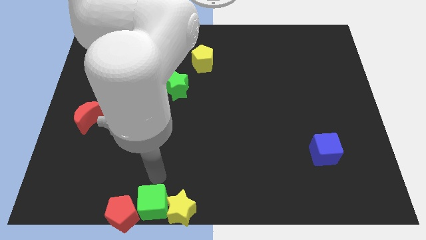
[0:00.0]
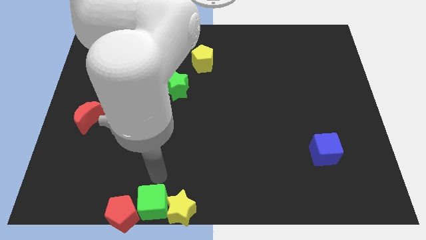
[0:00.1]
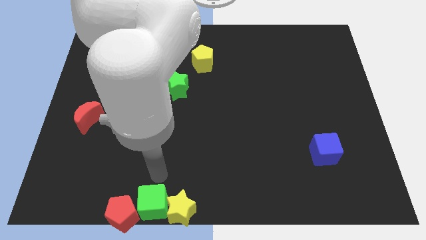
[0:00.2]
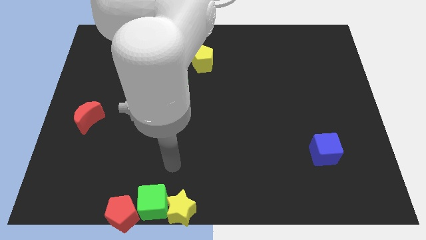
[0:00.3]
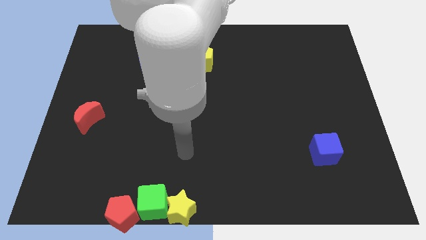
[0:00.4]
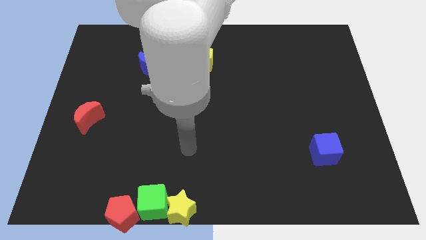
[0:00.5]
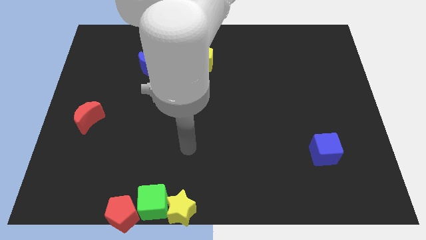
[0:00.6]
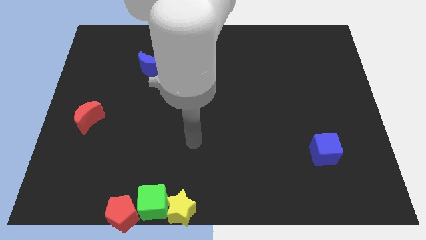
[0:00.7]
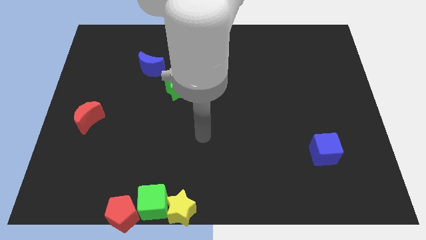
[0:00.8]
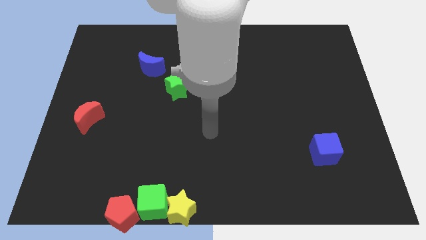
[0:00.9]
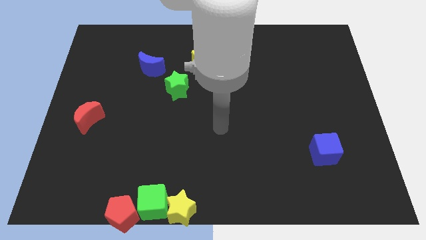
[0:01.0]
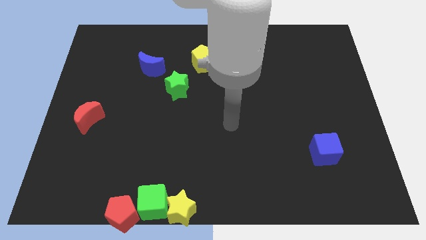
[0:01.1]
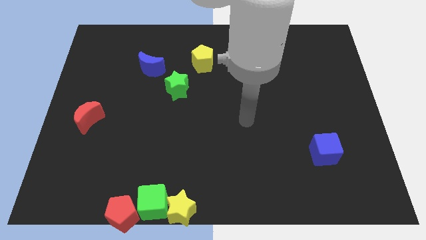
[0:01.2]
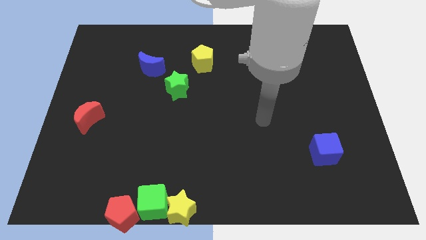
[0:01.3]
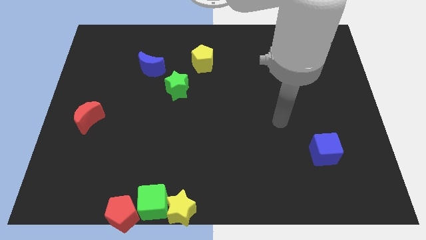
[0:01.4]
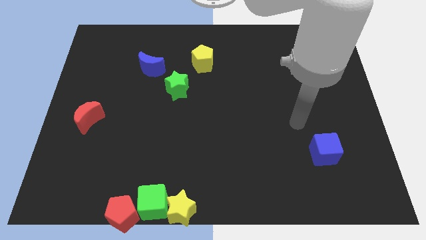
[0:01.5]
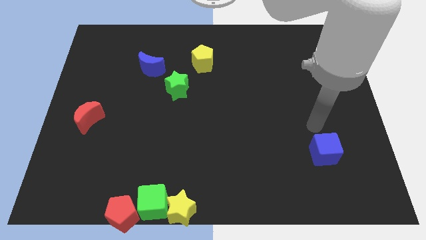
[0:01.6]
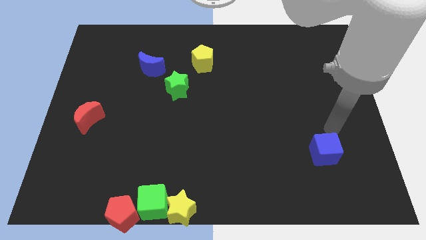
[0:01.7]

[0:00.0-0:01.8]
move your hand towards the blue cube

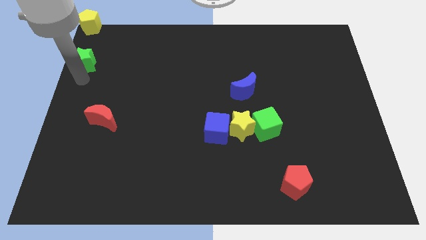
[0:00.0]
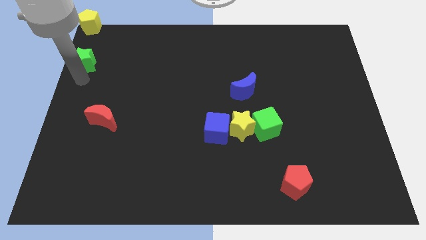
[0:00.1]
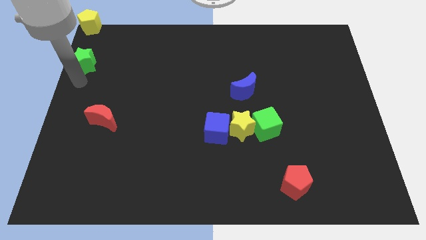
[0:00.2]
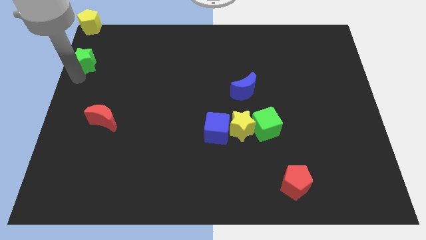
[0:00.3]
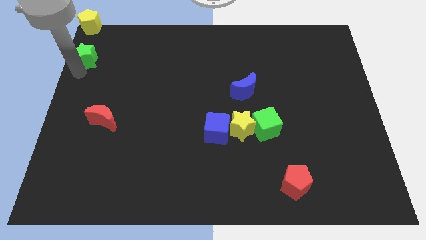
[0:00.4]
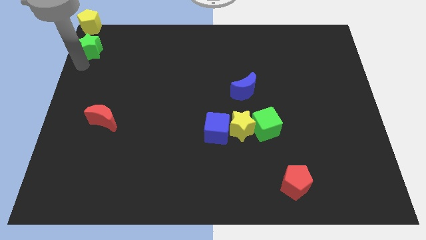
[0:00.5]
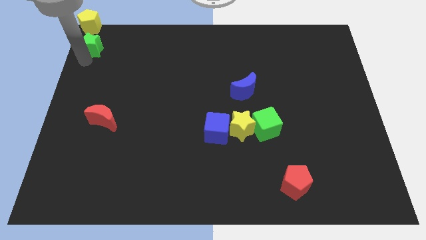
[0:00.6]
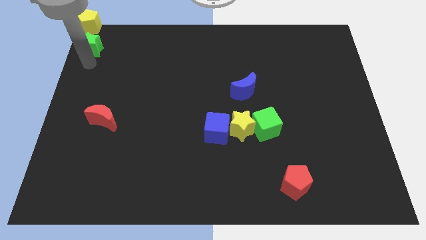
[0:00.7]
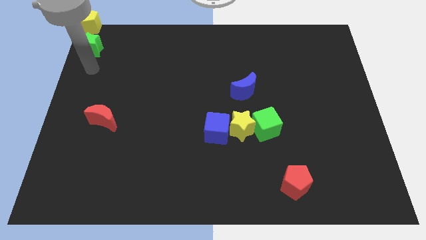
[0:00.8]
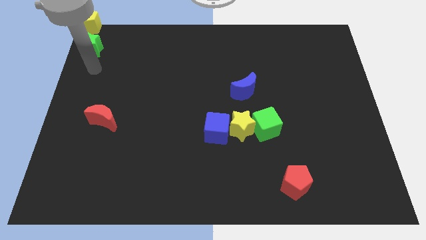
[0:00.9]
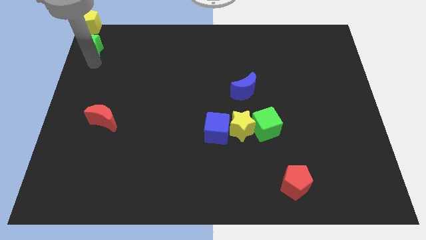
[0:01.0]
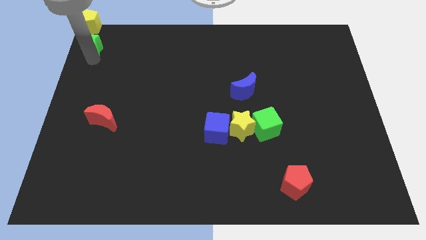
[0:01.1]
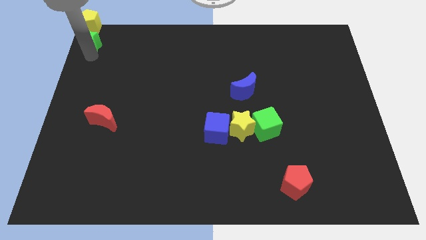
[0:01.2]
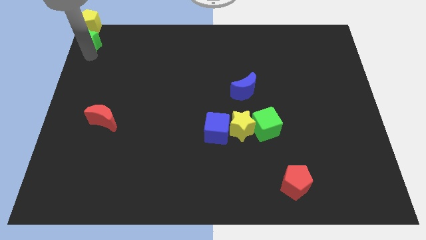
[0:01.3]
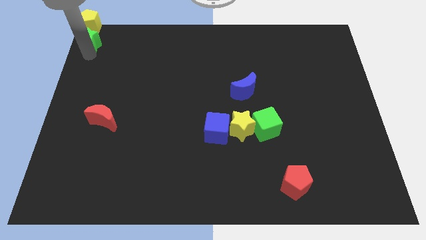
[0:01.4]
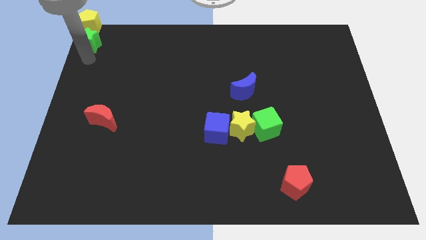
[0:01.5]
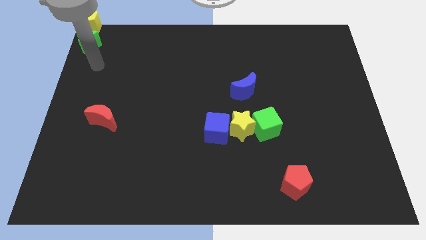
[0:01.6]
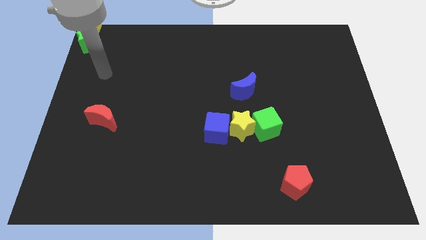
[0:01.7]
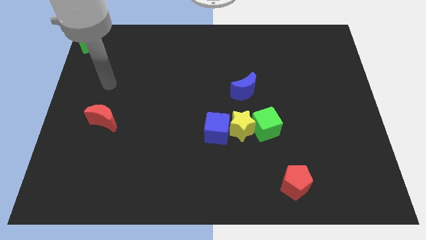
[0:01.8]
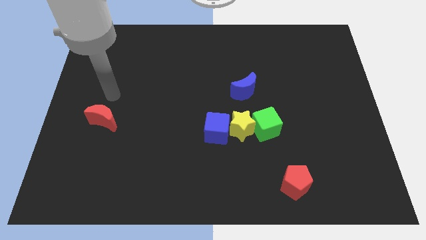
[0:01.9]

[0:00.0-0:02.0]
push the green star close to the yellow pentagon

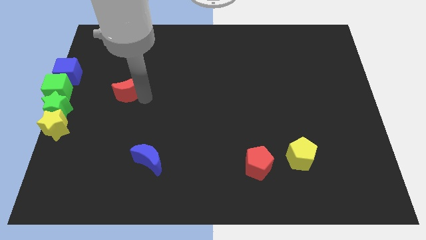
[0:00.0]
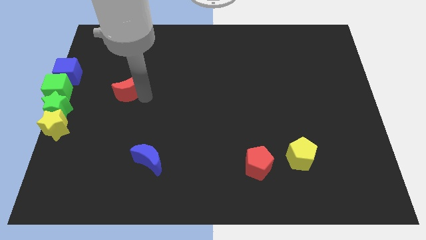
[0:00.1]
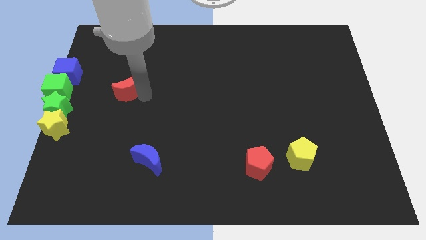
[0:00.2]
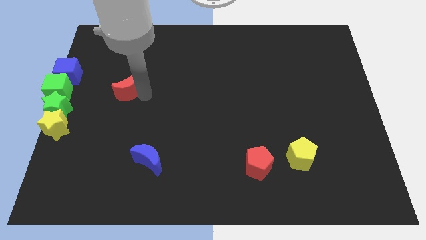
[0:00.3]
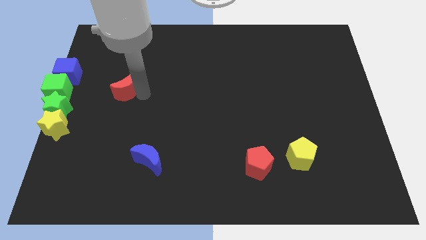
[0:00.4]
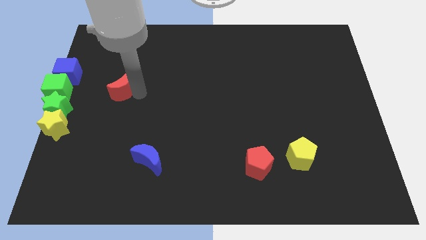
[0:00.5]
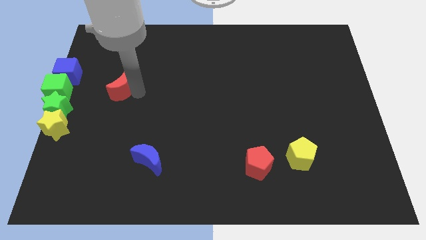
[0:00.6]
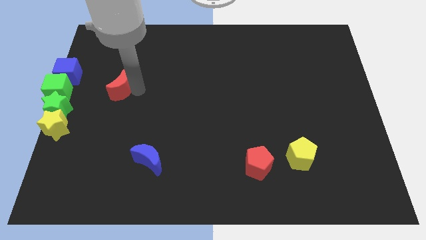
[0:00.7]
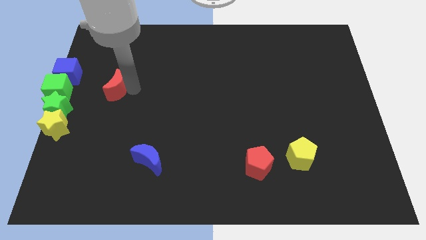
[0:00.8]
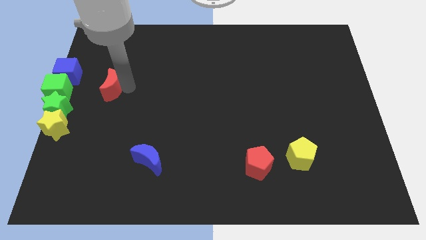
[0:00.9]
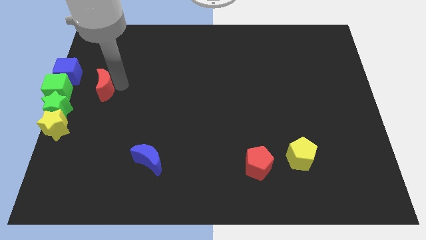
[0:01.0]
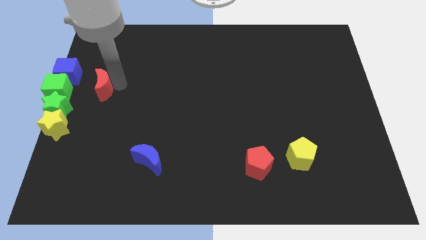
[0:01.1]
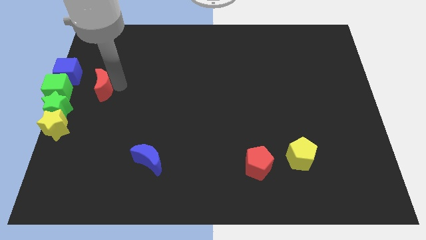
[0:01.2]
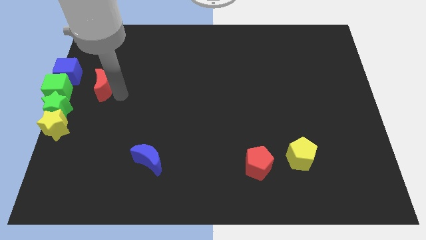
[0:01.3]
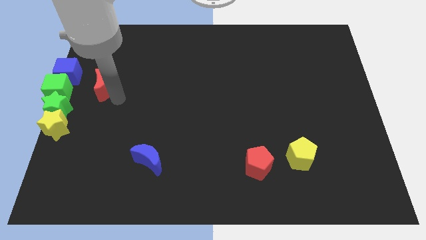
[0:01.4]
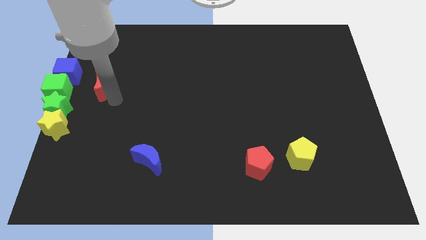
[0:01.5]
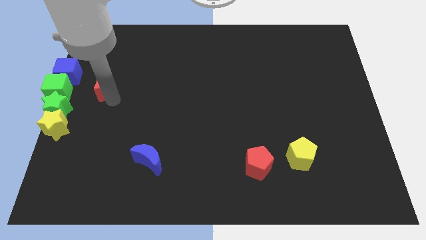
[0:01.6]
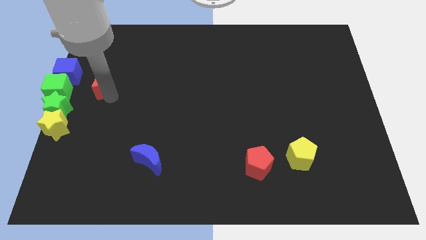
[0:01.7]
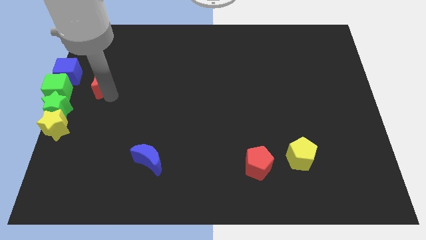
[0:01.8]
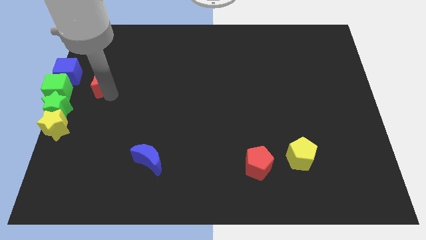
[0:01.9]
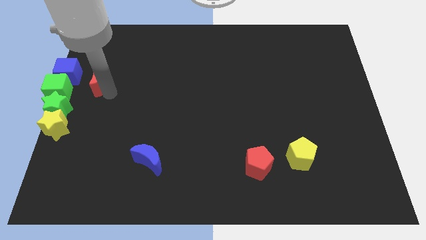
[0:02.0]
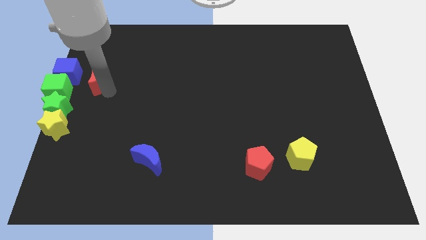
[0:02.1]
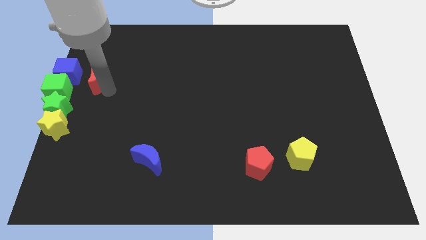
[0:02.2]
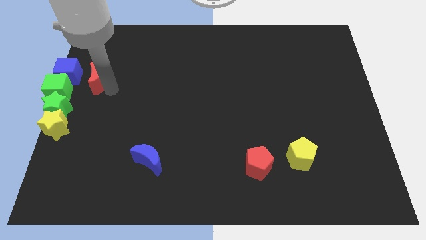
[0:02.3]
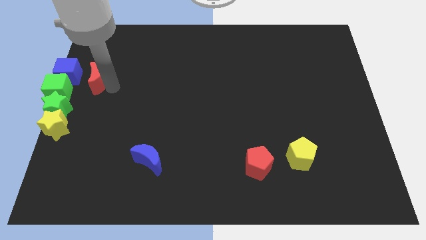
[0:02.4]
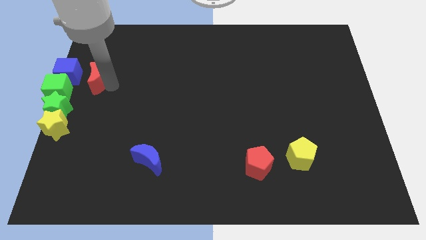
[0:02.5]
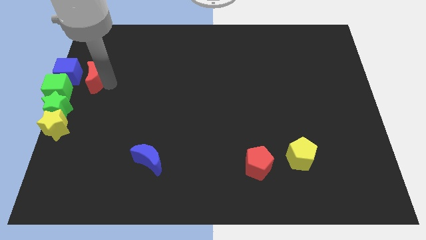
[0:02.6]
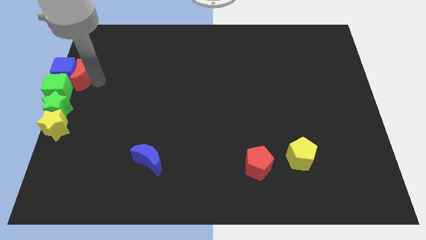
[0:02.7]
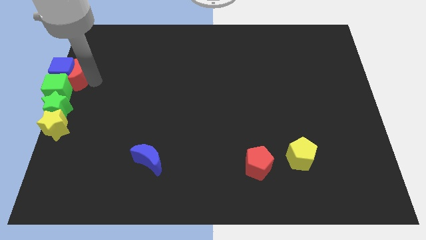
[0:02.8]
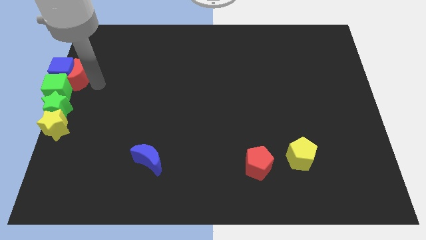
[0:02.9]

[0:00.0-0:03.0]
push the red crescent into the blue cube at the left

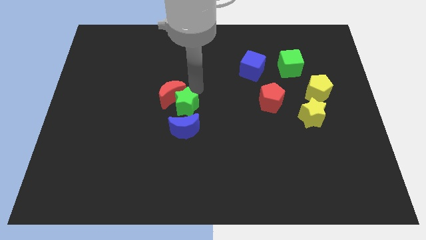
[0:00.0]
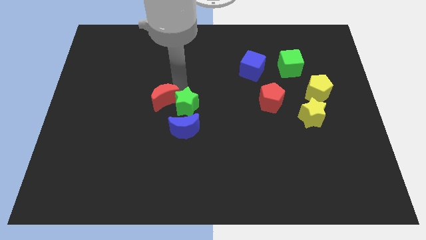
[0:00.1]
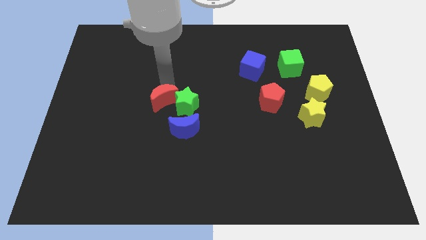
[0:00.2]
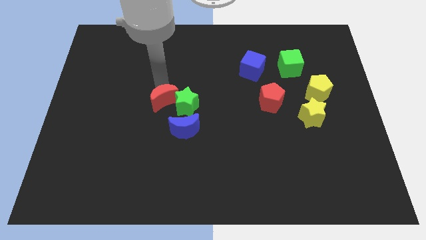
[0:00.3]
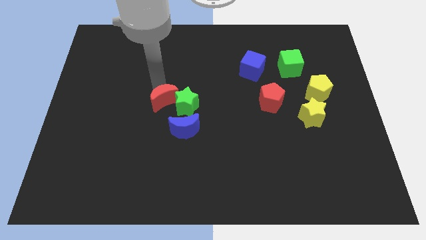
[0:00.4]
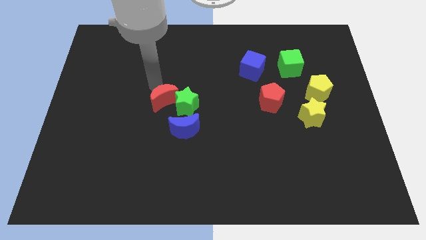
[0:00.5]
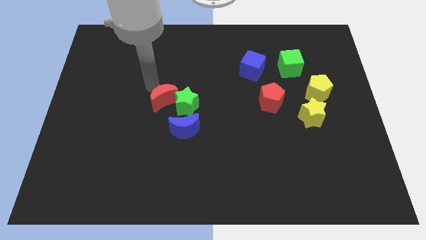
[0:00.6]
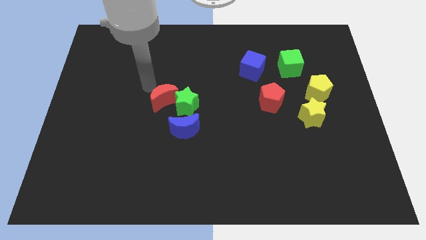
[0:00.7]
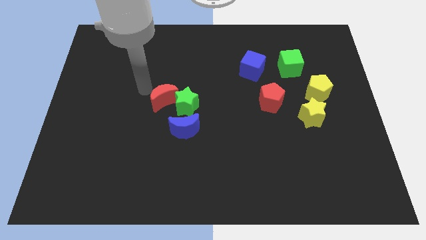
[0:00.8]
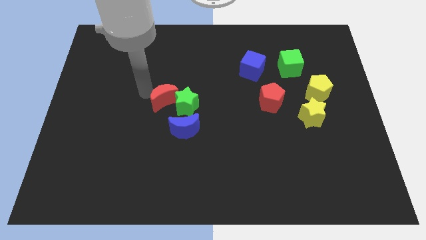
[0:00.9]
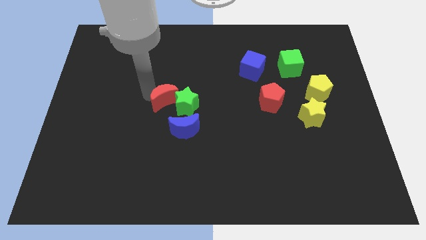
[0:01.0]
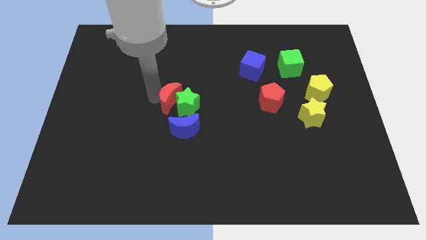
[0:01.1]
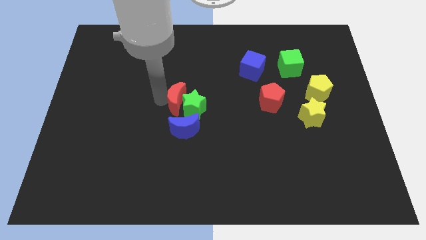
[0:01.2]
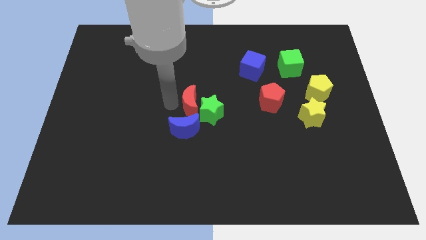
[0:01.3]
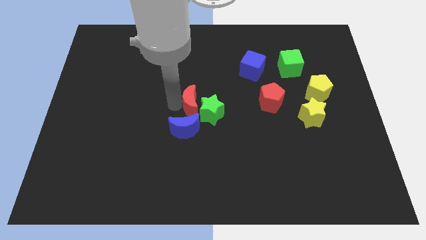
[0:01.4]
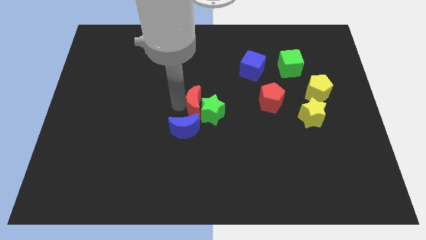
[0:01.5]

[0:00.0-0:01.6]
place the red crescent along with green star at center of the board

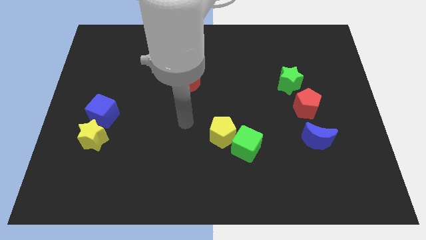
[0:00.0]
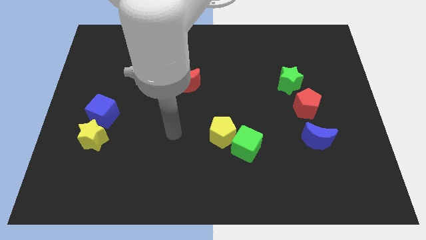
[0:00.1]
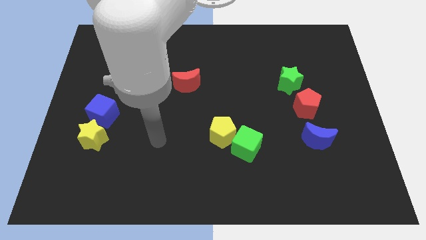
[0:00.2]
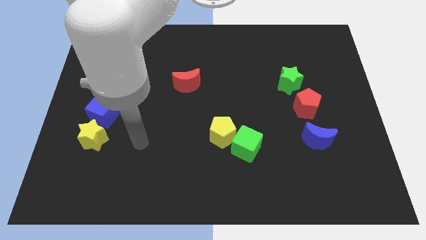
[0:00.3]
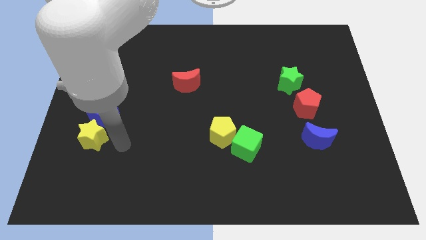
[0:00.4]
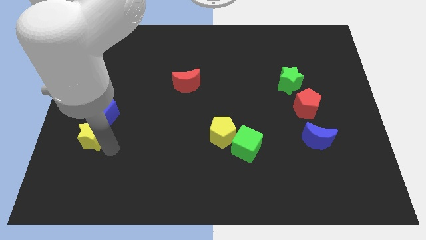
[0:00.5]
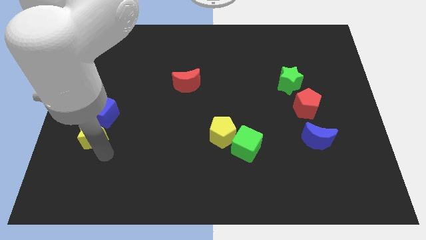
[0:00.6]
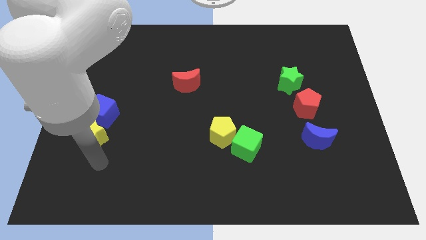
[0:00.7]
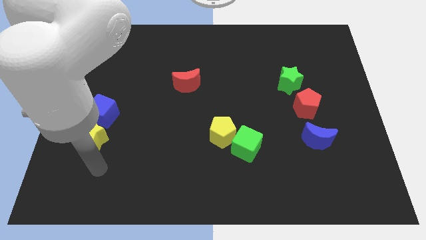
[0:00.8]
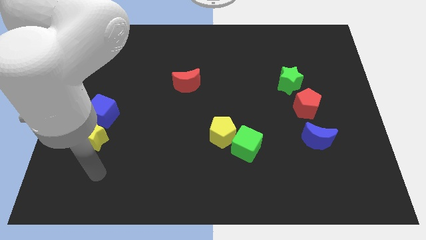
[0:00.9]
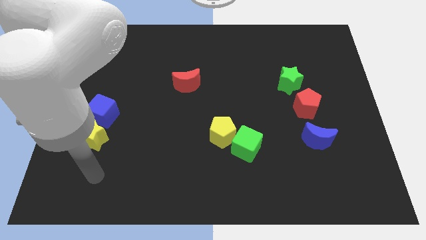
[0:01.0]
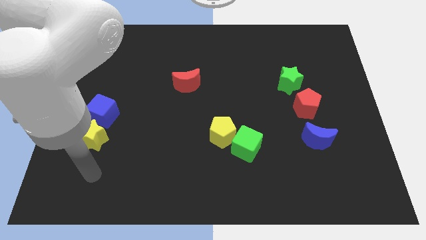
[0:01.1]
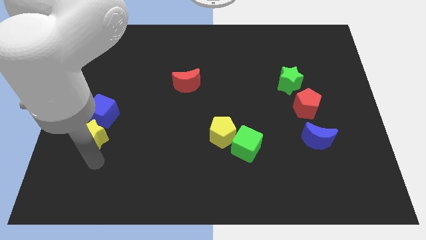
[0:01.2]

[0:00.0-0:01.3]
put the arm below the yellow star
